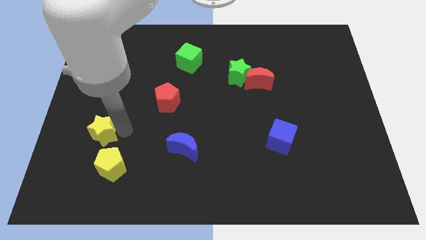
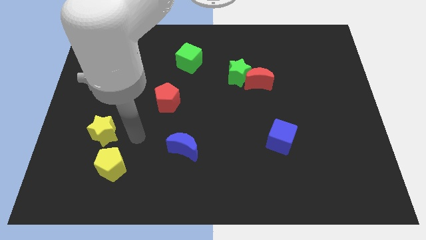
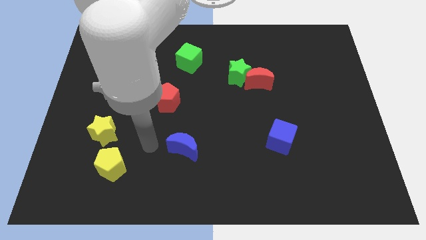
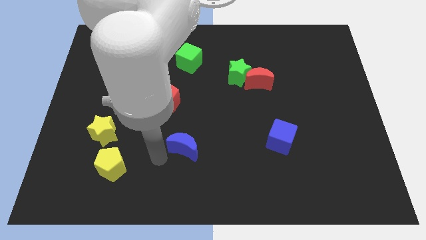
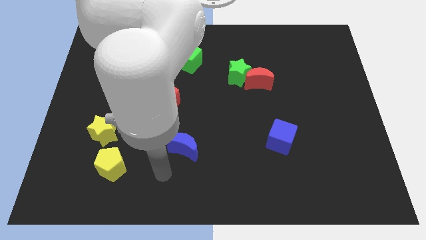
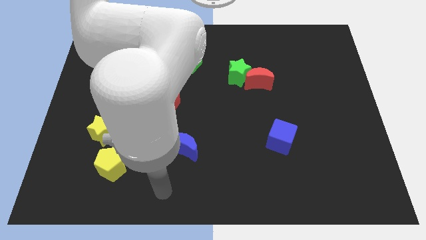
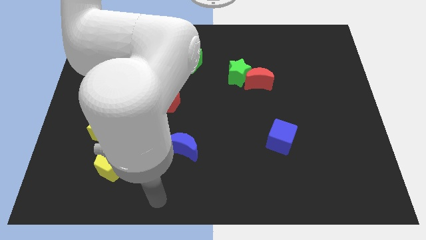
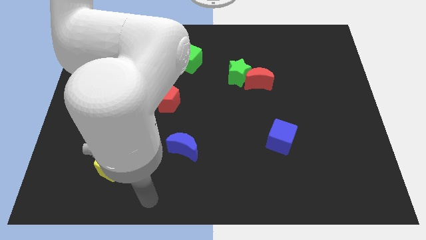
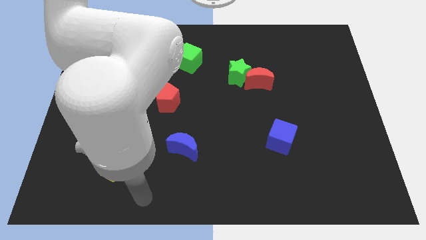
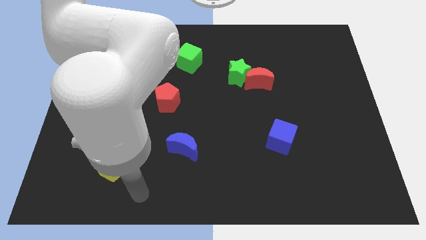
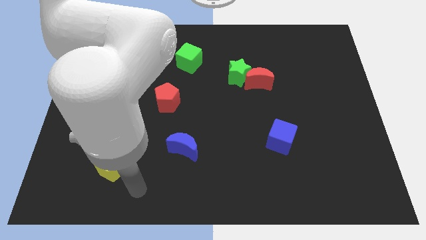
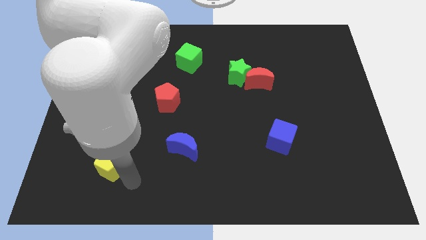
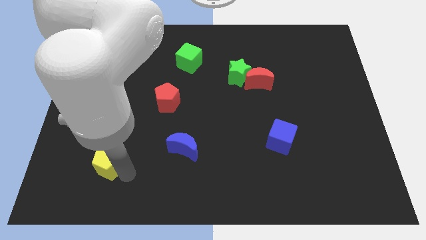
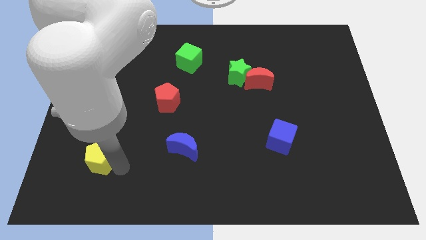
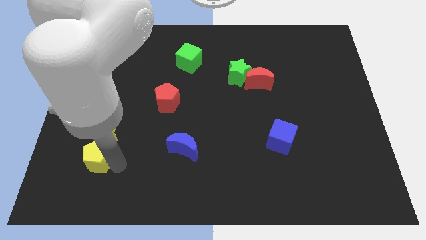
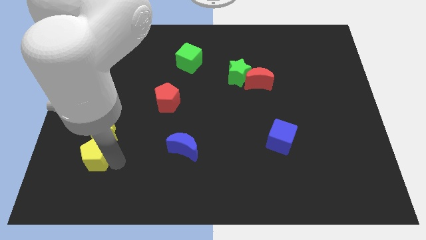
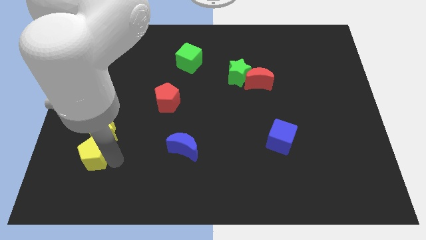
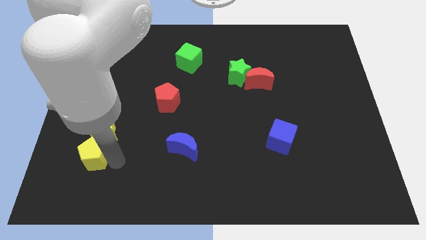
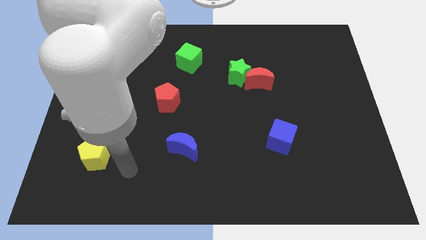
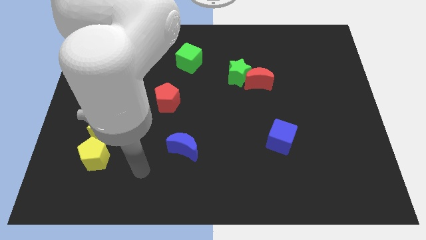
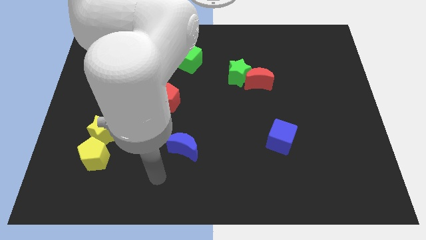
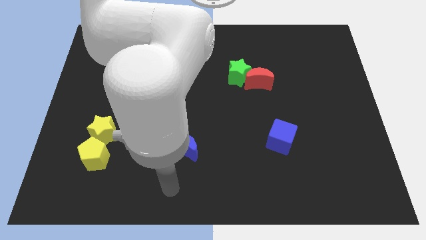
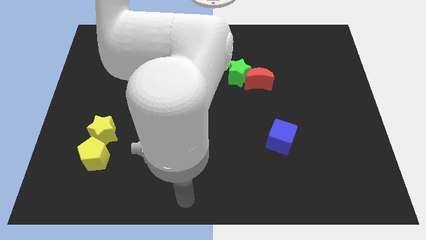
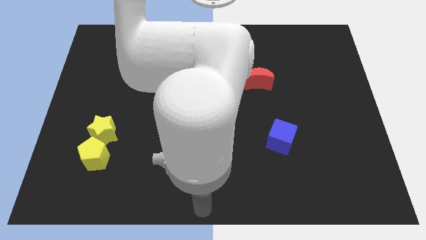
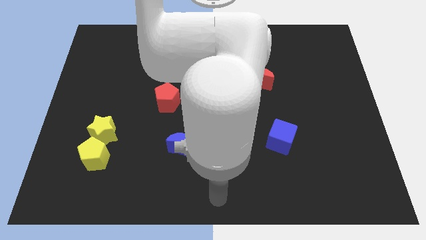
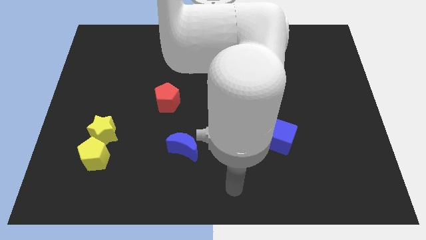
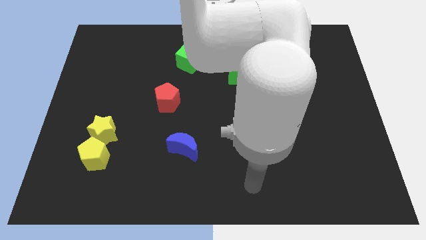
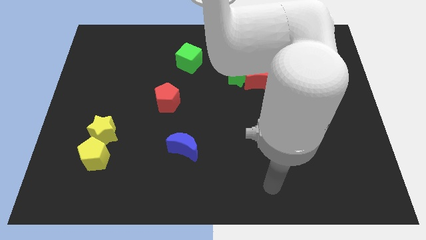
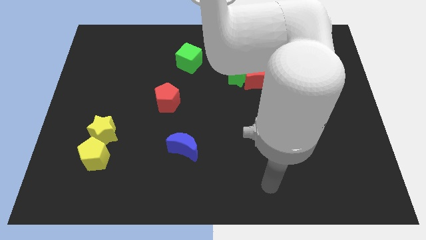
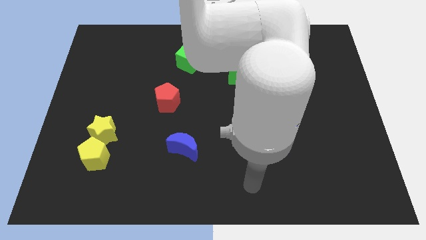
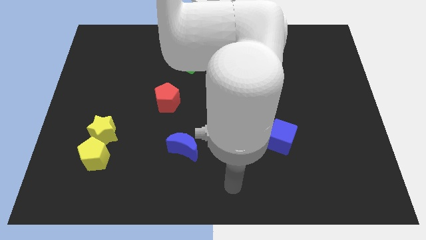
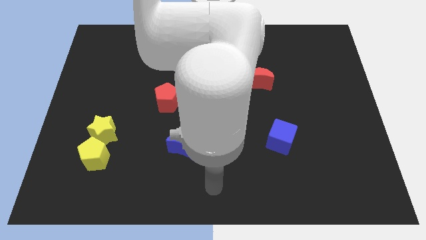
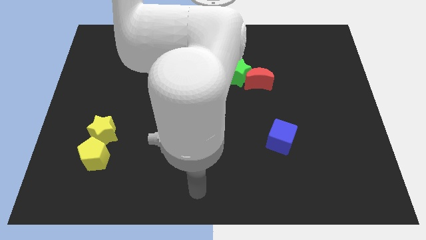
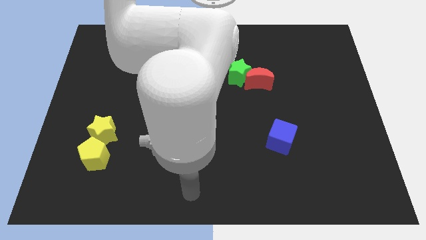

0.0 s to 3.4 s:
point your arm at the bottom of the blue crescent

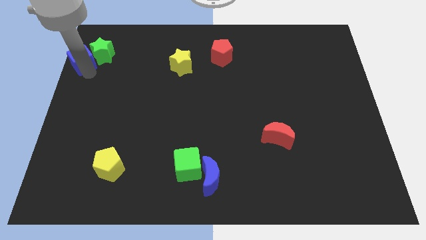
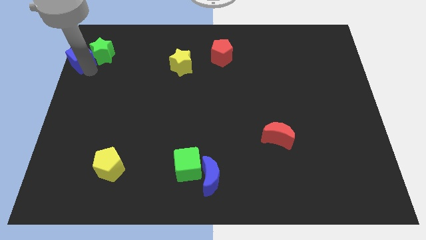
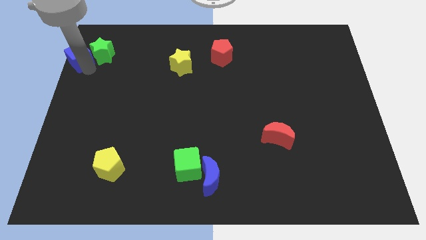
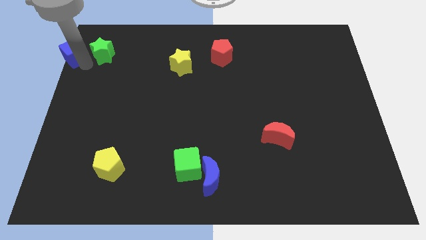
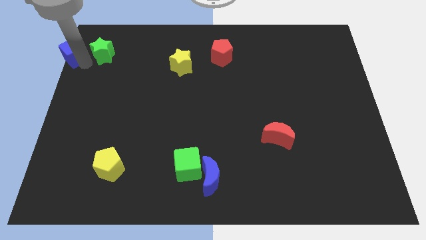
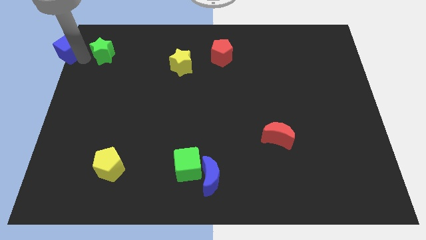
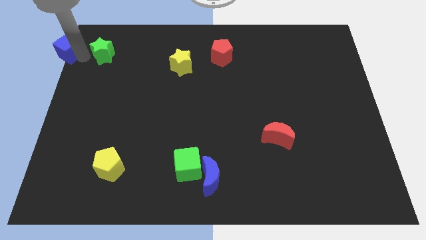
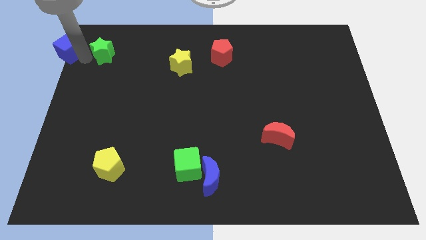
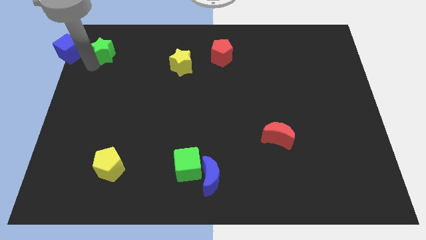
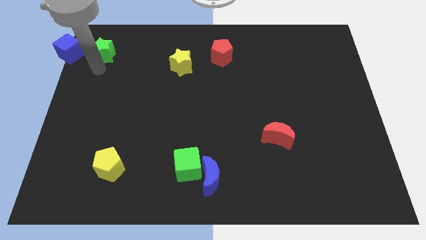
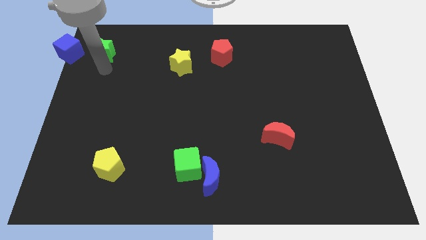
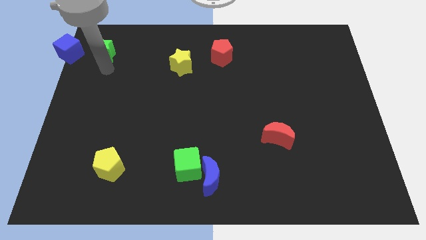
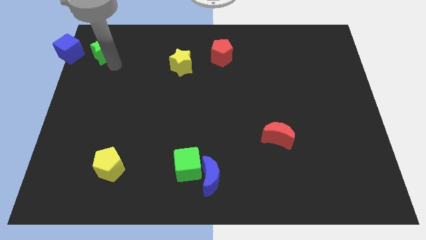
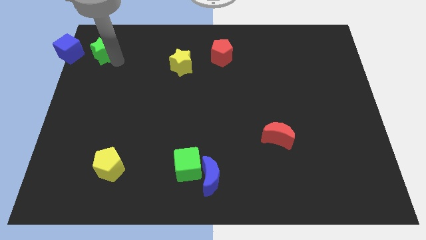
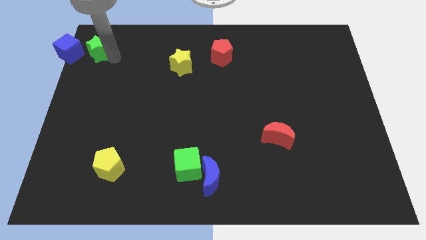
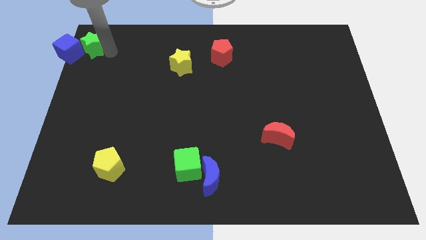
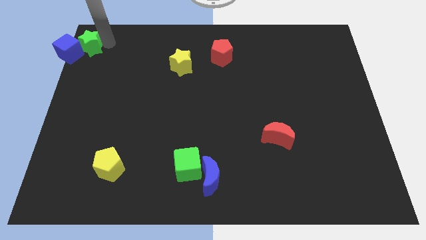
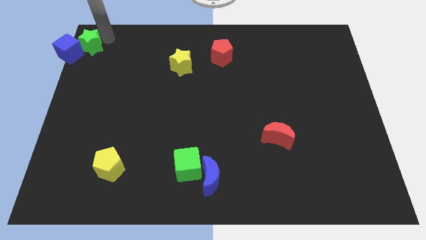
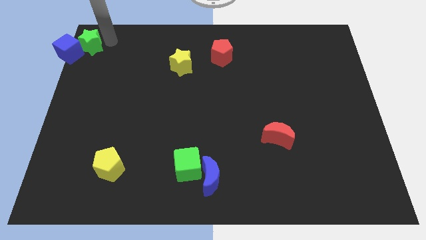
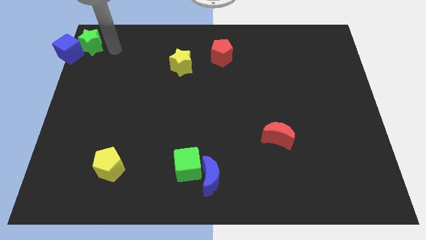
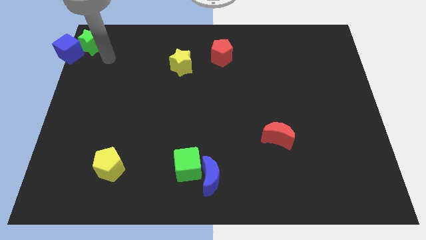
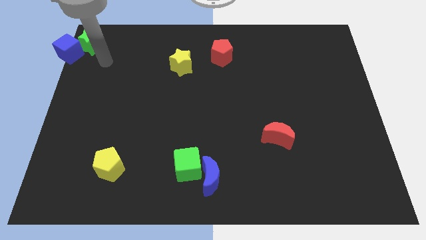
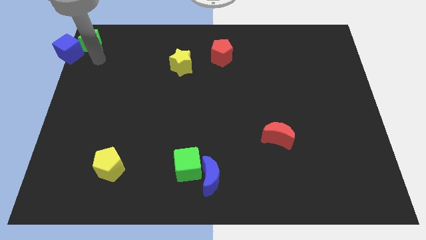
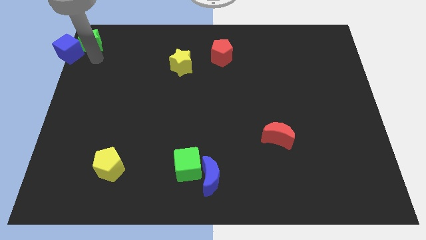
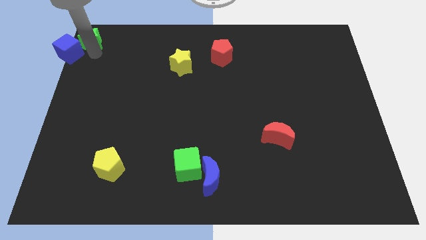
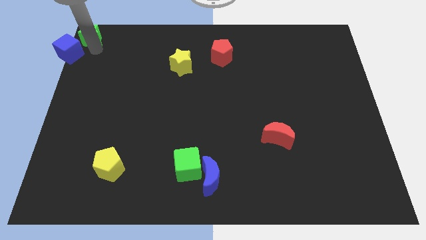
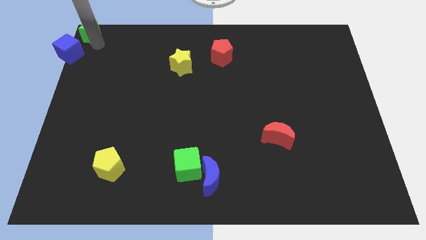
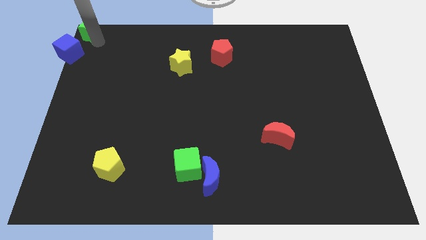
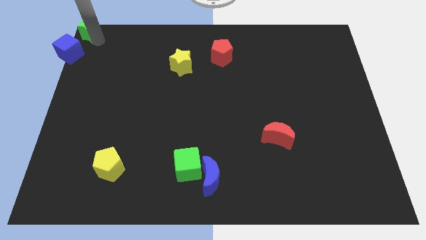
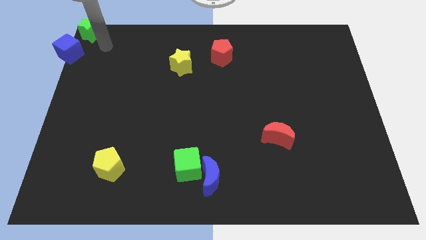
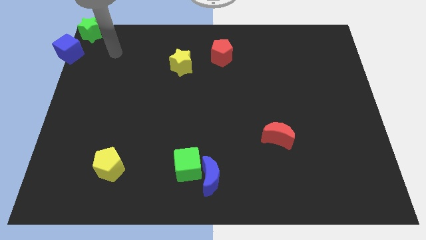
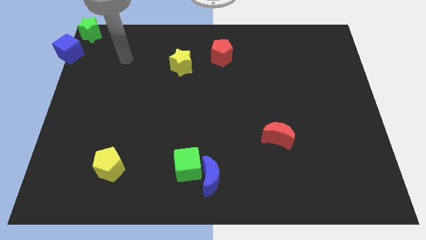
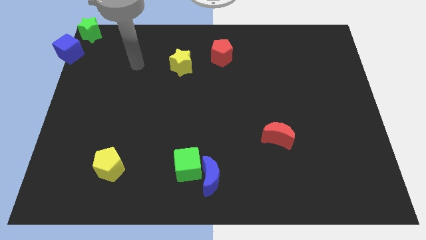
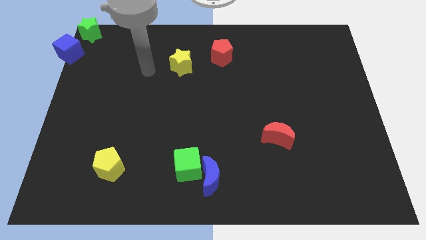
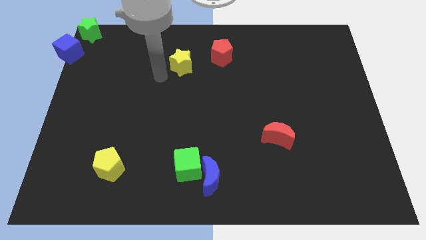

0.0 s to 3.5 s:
drag the green star and blue cube to the top left corner of the board

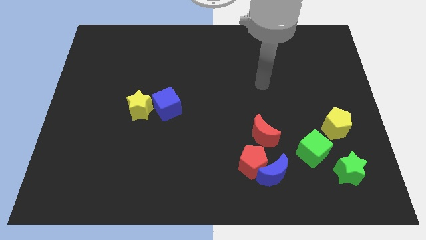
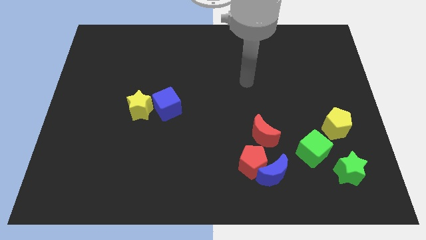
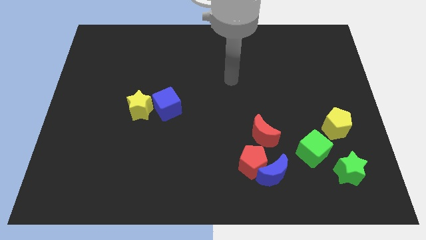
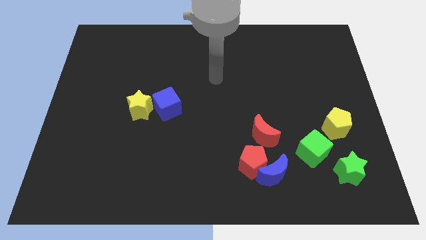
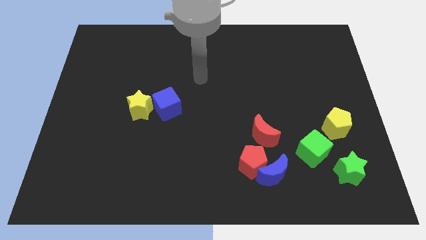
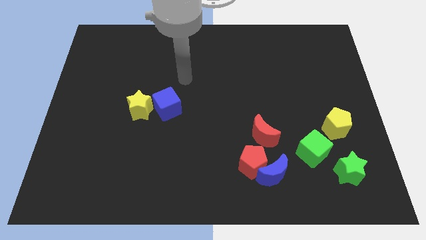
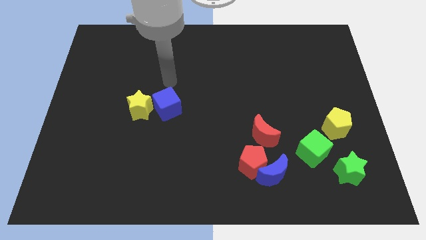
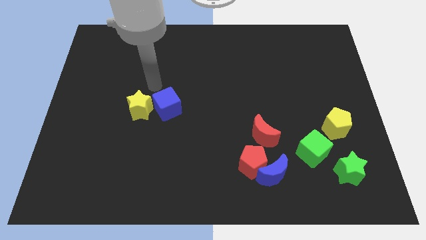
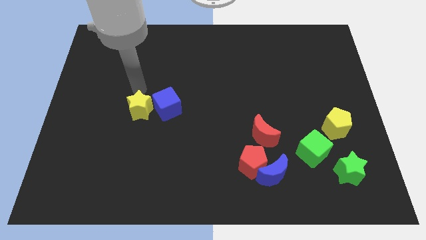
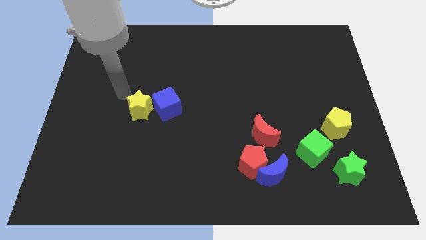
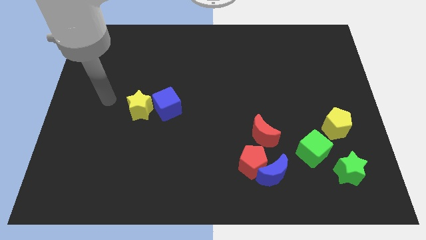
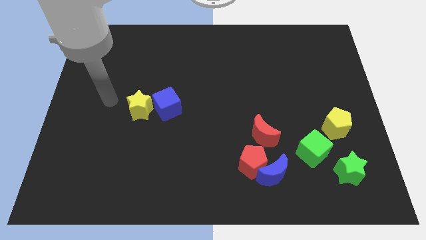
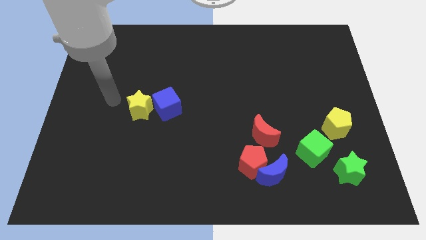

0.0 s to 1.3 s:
move your arm towards the yellow star

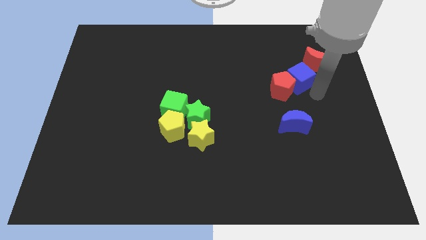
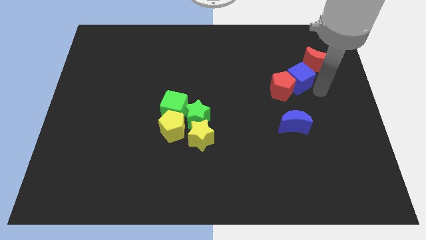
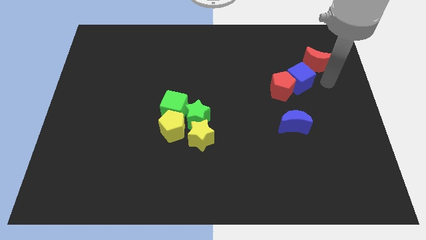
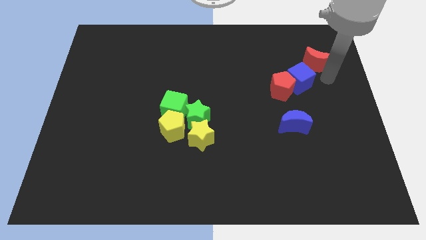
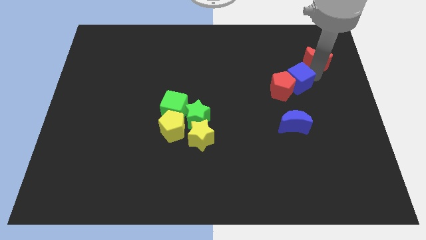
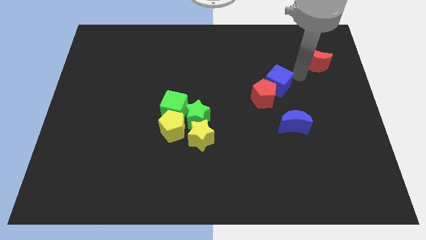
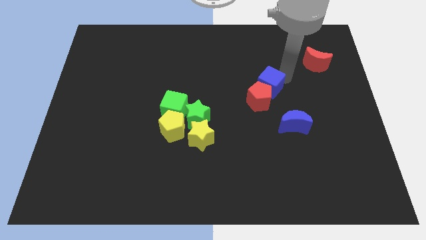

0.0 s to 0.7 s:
separate the blue cube from the red crescent
